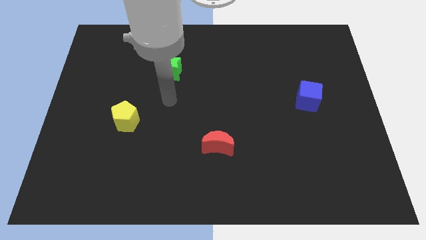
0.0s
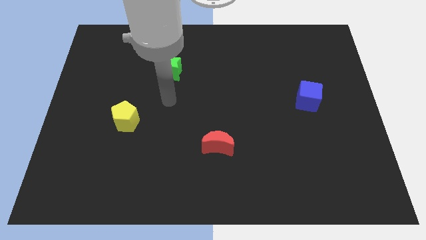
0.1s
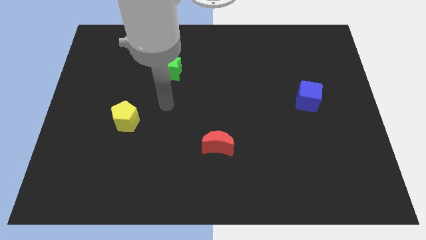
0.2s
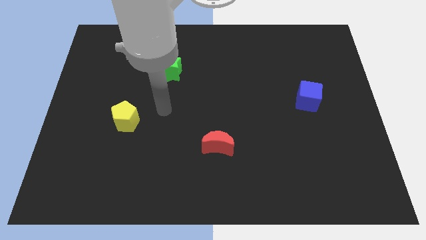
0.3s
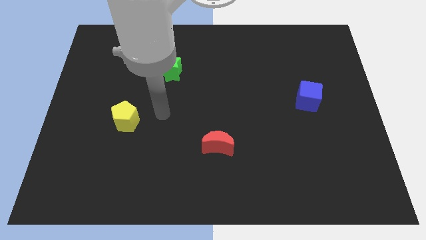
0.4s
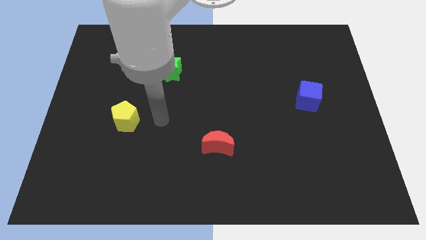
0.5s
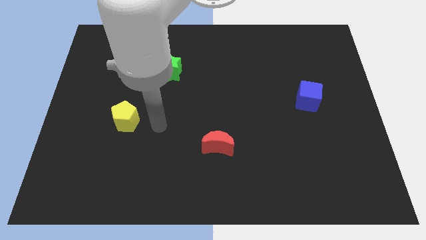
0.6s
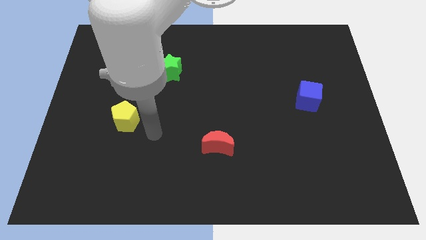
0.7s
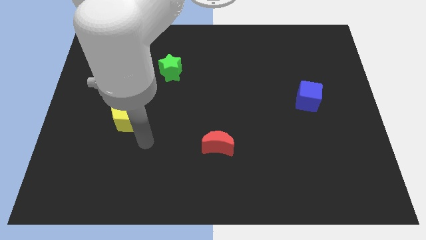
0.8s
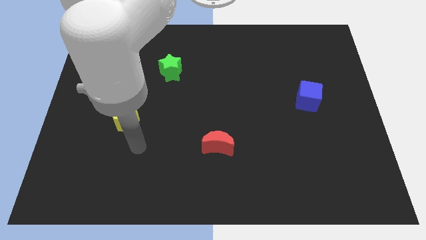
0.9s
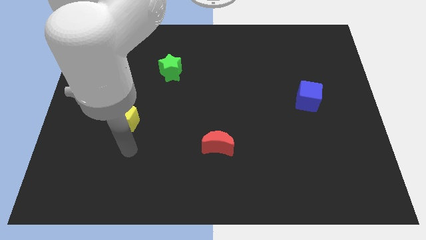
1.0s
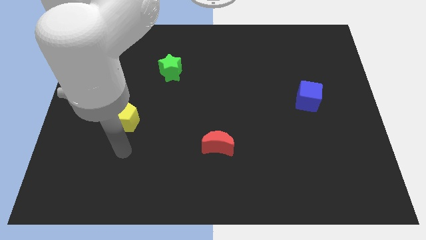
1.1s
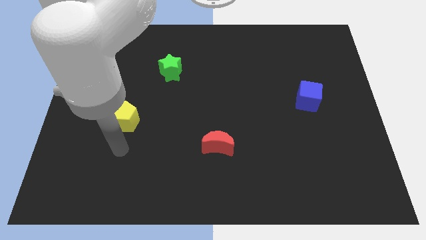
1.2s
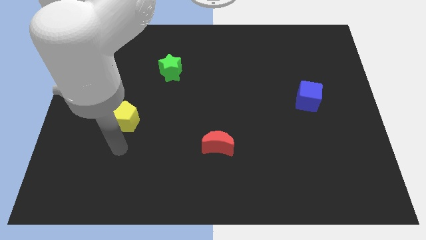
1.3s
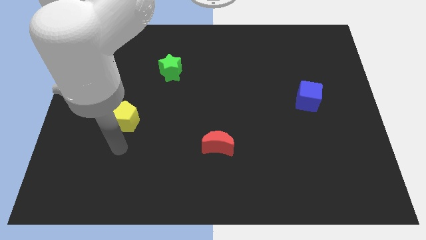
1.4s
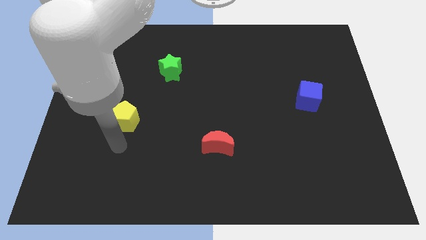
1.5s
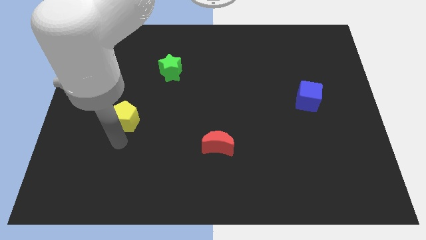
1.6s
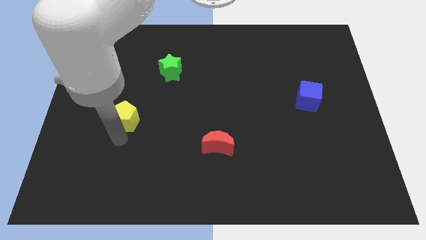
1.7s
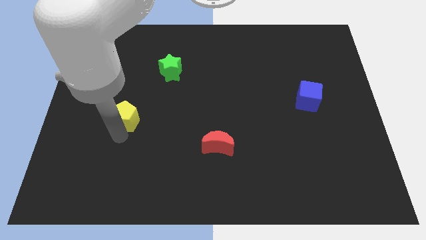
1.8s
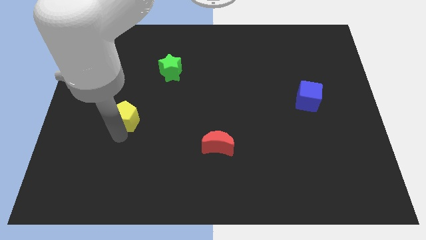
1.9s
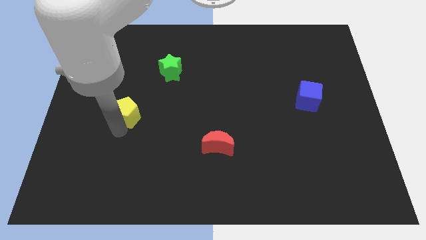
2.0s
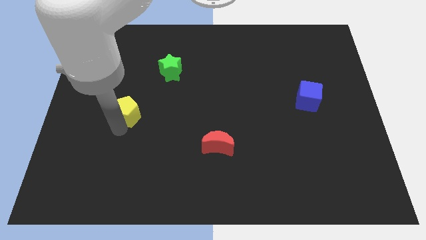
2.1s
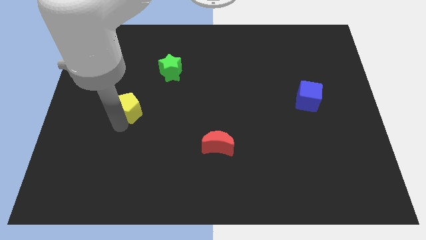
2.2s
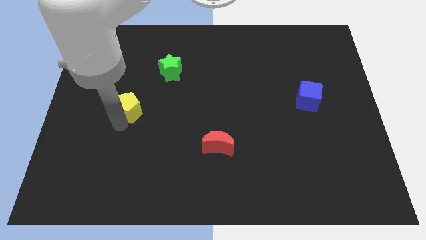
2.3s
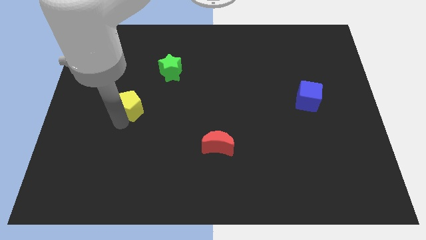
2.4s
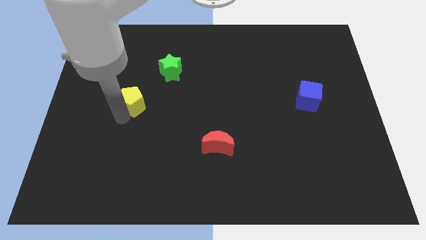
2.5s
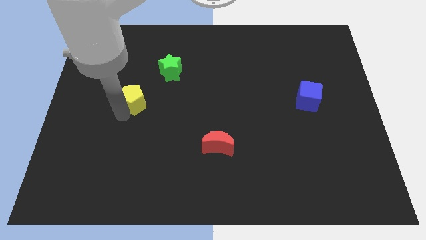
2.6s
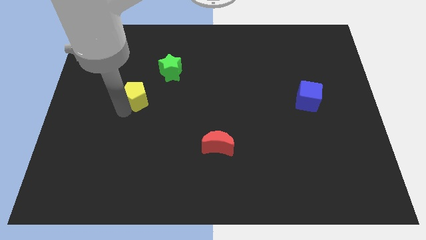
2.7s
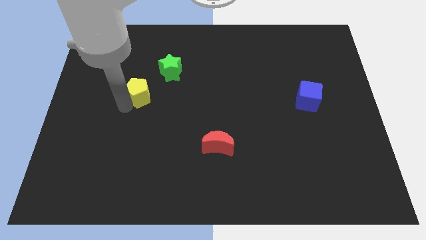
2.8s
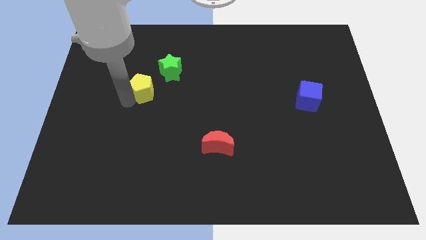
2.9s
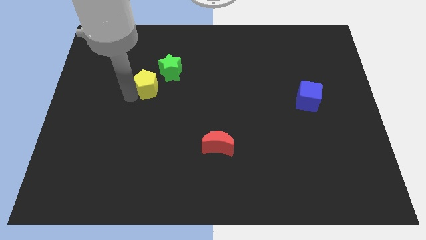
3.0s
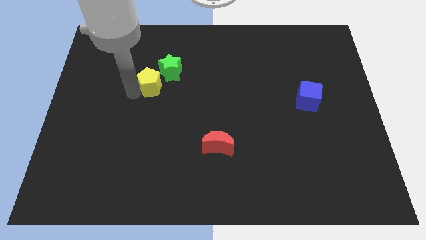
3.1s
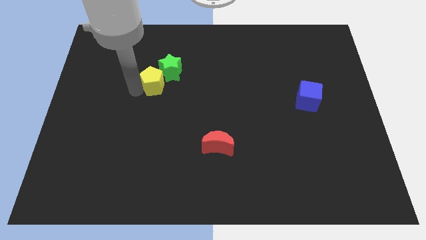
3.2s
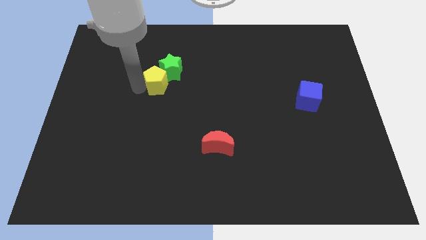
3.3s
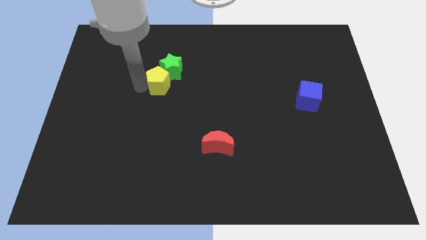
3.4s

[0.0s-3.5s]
push the yellow block to the green star

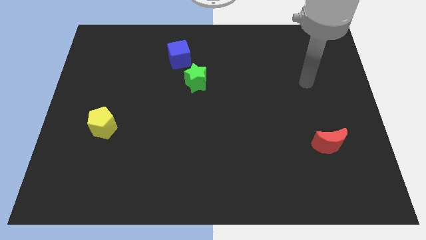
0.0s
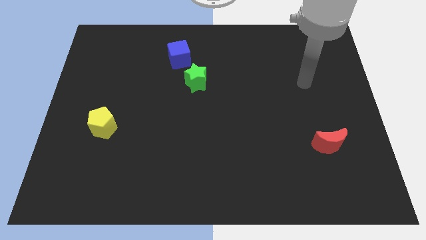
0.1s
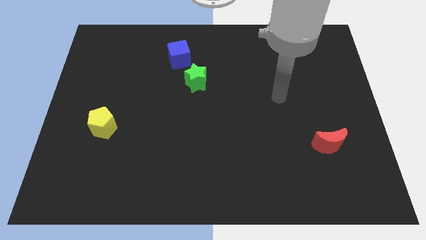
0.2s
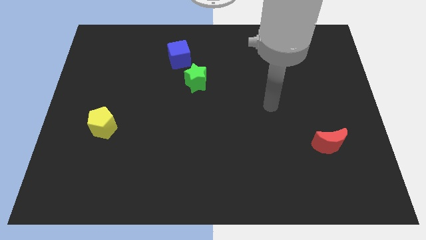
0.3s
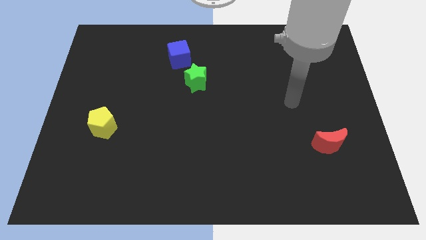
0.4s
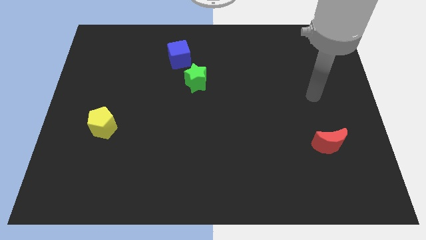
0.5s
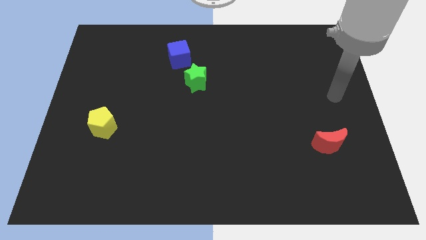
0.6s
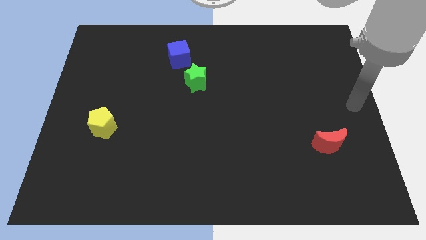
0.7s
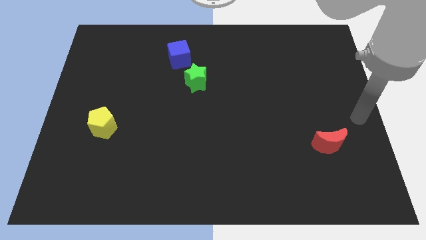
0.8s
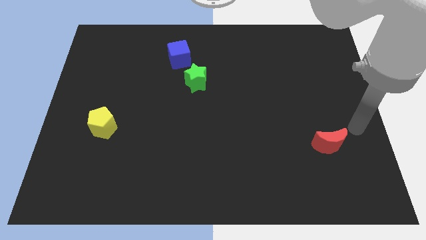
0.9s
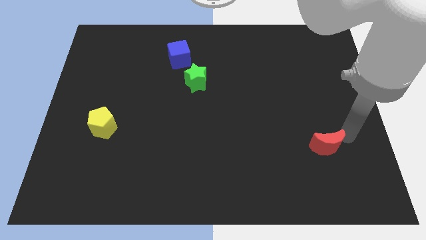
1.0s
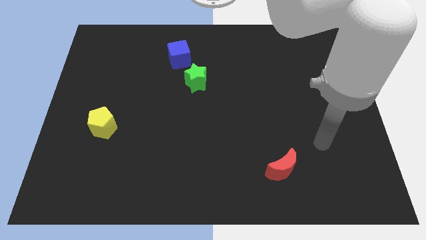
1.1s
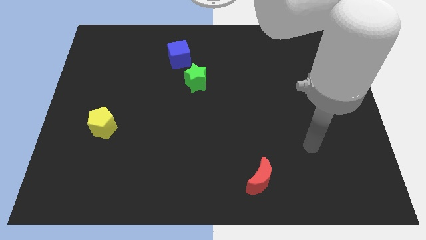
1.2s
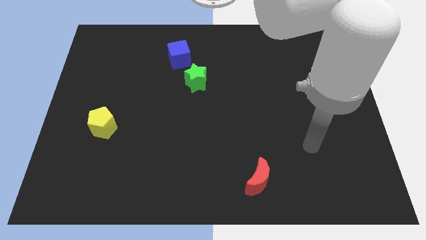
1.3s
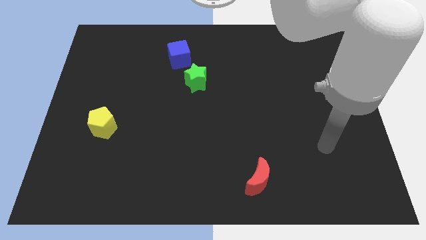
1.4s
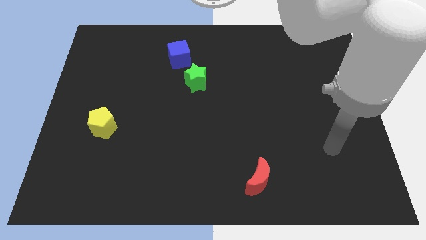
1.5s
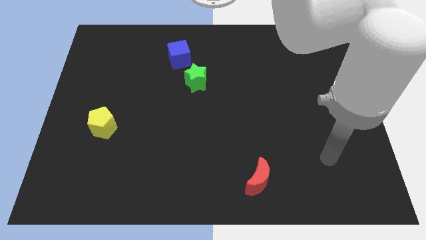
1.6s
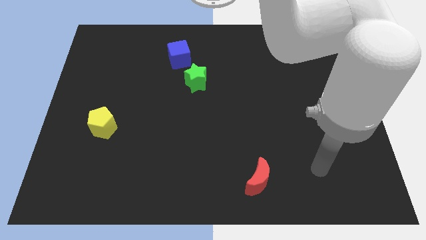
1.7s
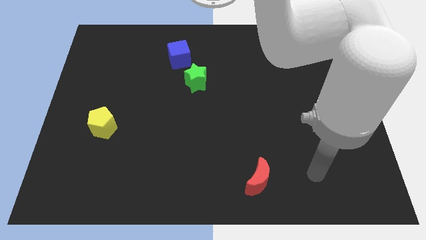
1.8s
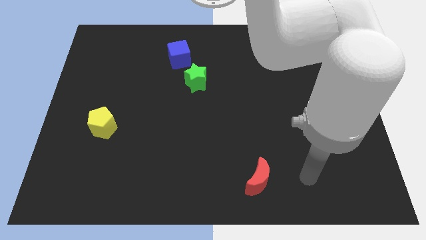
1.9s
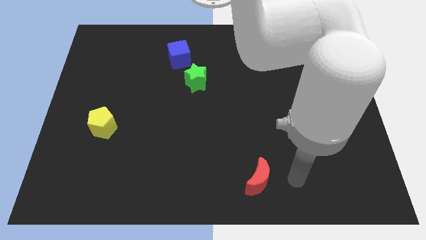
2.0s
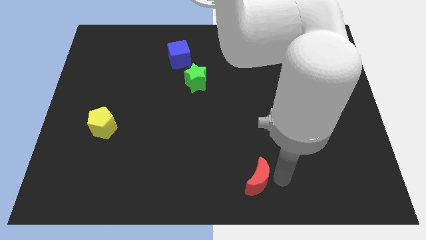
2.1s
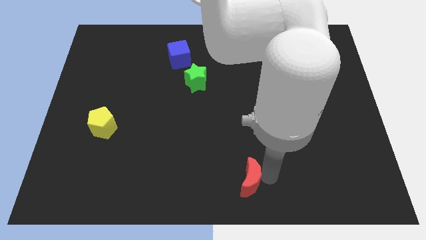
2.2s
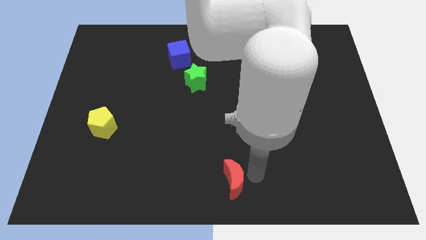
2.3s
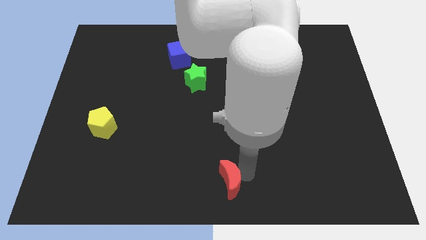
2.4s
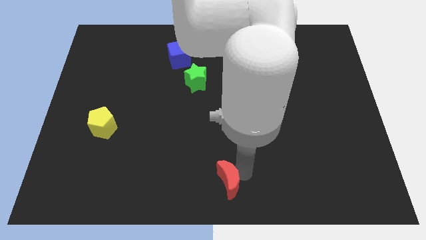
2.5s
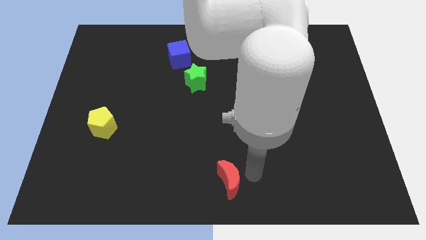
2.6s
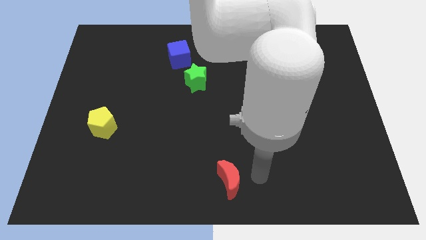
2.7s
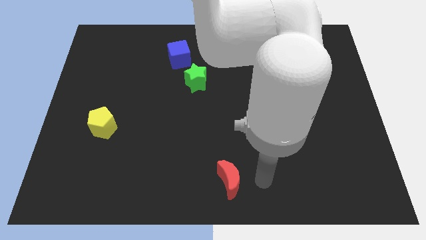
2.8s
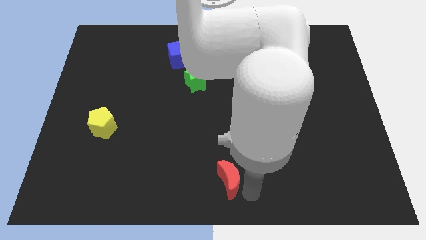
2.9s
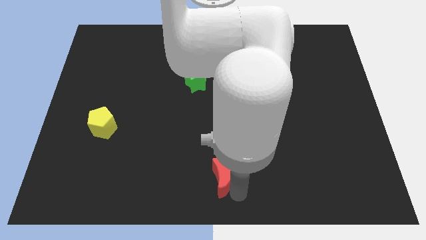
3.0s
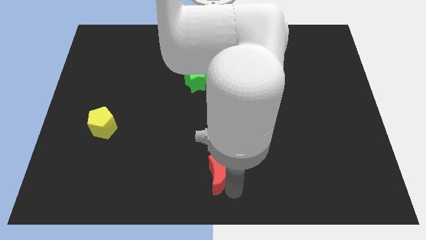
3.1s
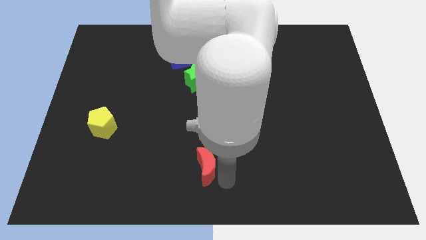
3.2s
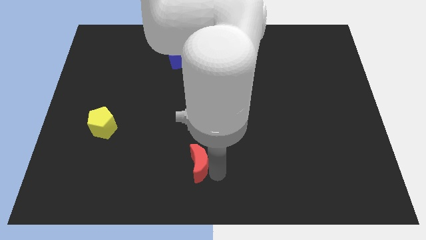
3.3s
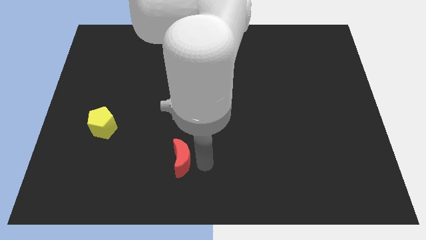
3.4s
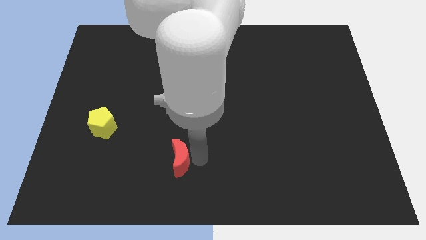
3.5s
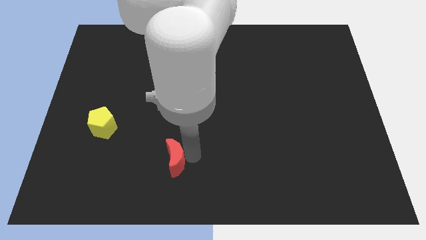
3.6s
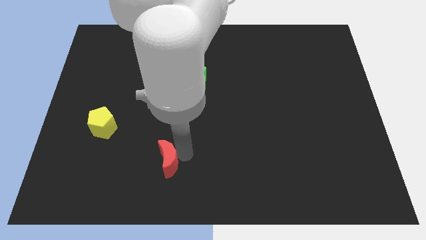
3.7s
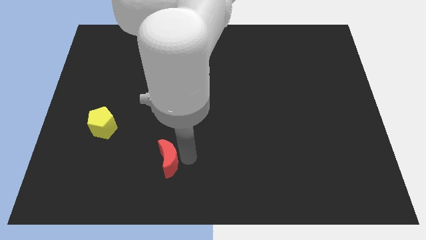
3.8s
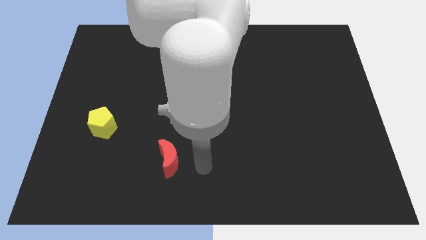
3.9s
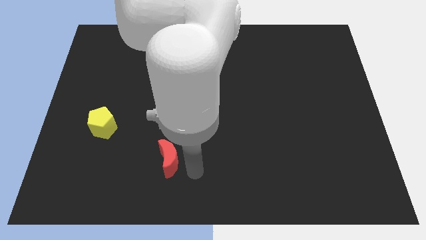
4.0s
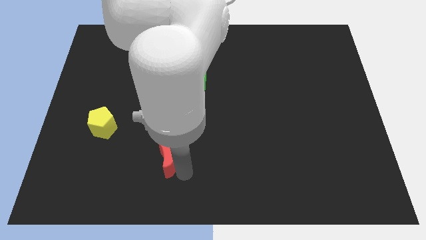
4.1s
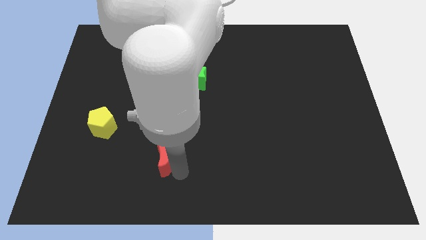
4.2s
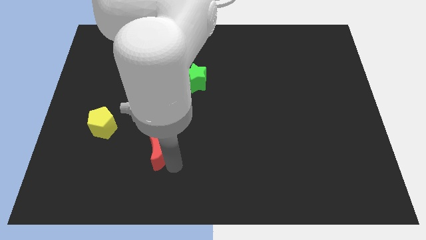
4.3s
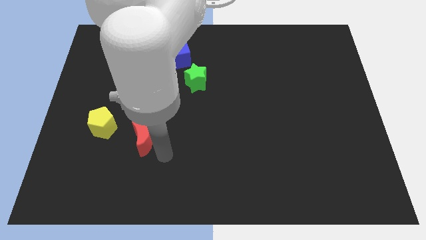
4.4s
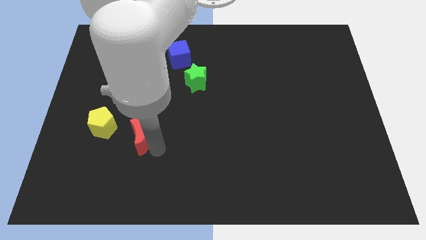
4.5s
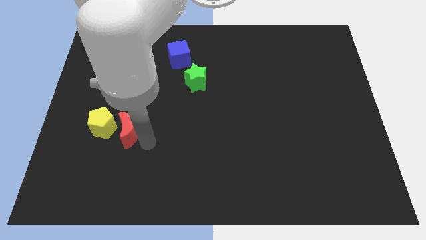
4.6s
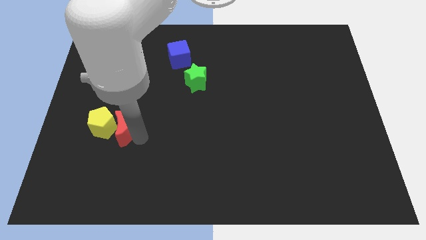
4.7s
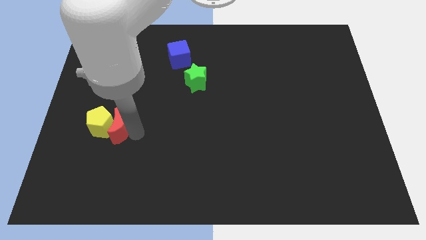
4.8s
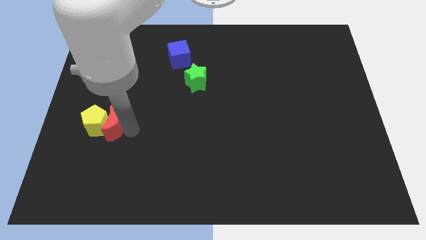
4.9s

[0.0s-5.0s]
push the moon close to the pentagon

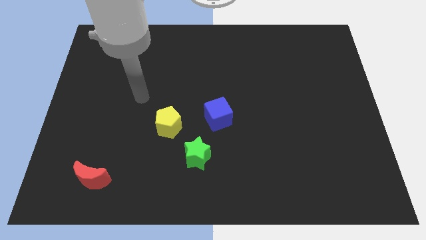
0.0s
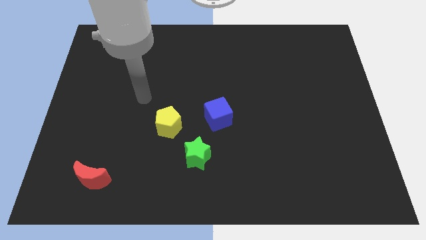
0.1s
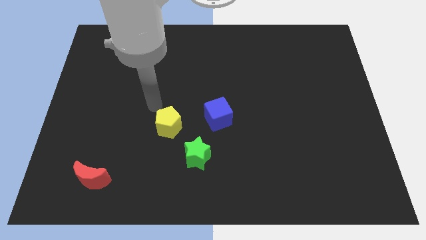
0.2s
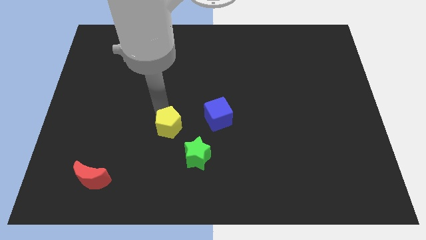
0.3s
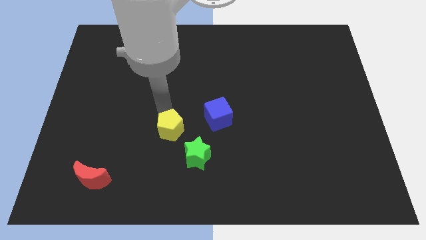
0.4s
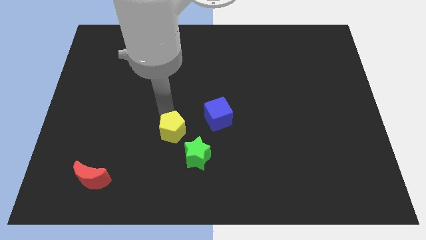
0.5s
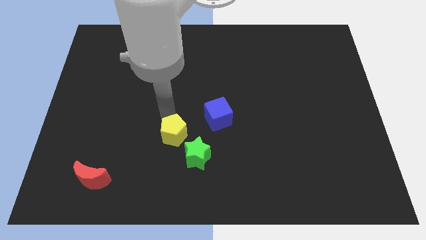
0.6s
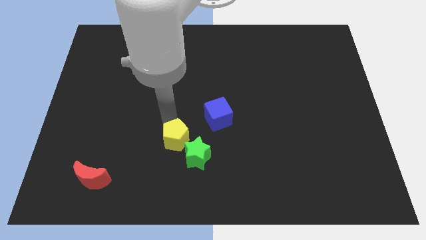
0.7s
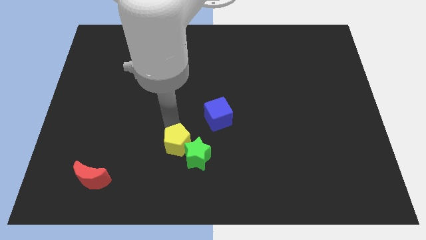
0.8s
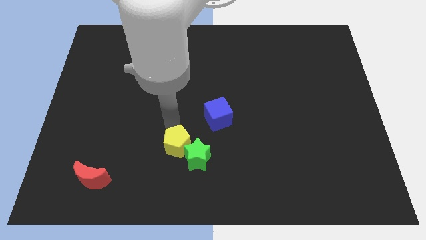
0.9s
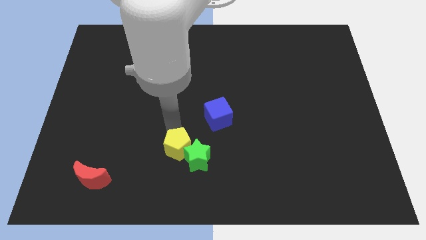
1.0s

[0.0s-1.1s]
slide the pentagon close to the green star
